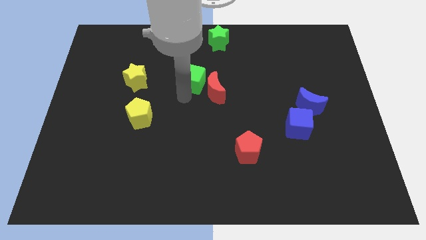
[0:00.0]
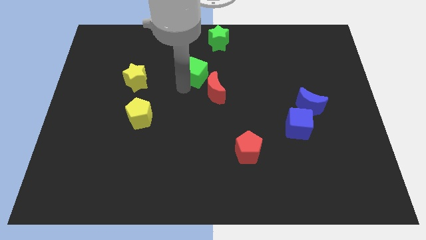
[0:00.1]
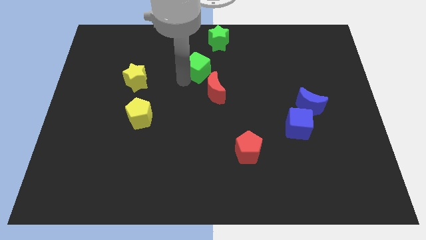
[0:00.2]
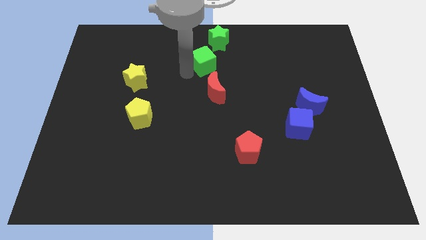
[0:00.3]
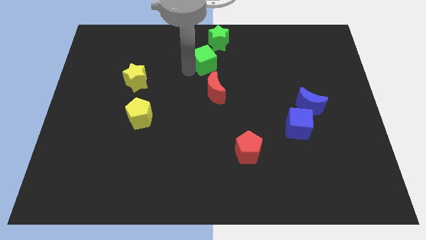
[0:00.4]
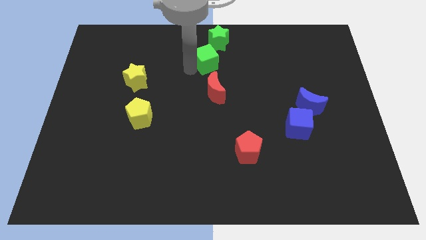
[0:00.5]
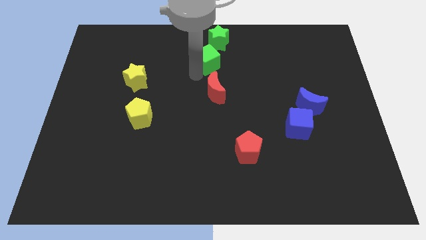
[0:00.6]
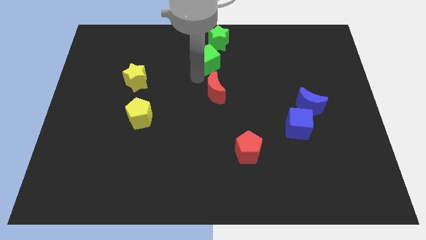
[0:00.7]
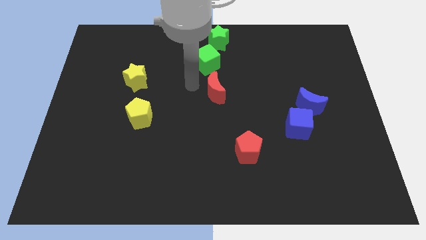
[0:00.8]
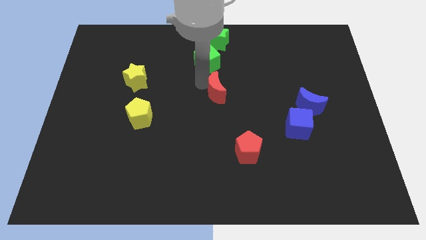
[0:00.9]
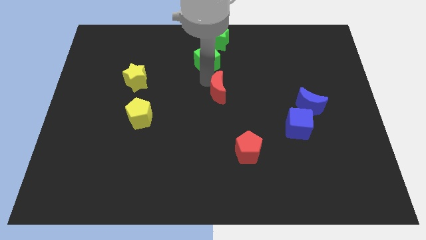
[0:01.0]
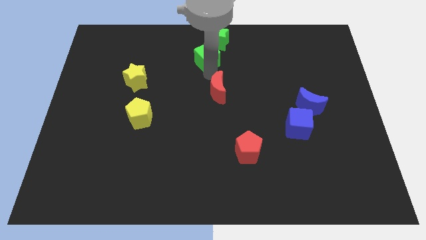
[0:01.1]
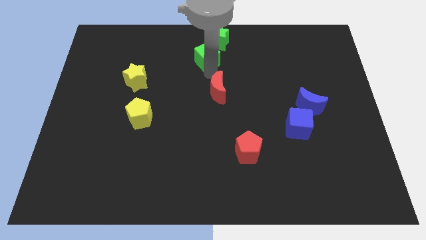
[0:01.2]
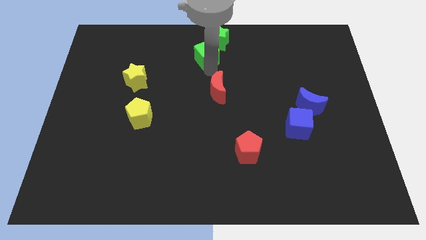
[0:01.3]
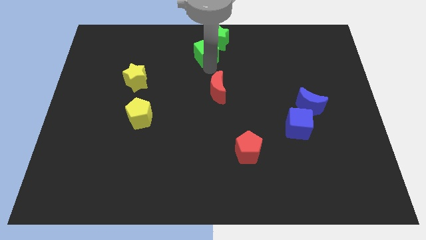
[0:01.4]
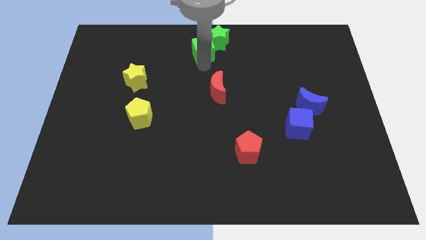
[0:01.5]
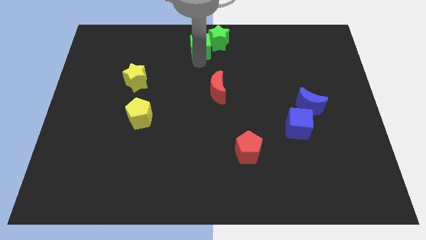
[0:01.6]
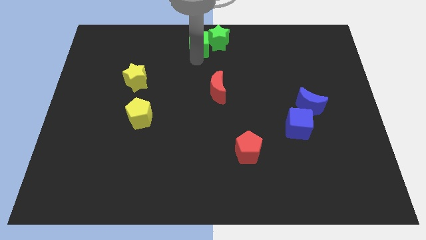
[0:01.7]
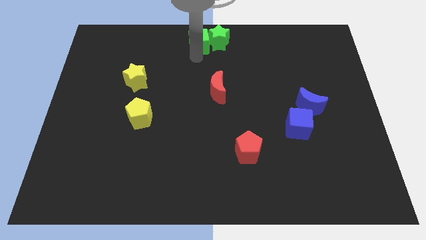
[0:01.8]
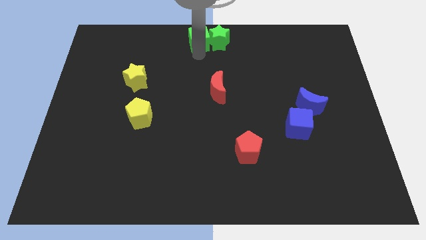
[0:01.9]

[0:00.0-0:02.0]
move the green cube towards the top center of the board

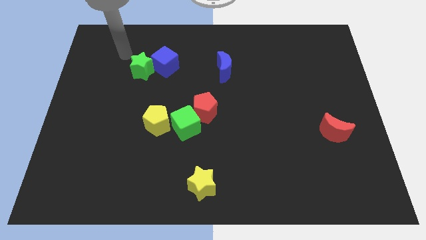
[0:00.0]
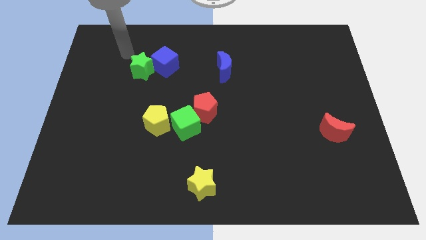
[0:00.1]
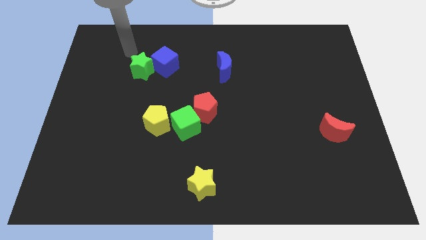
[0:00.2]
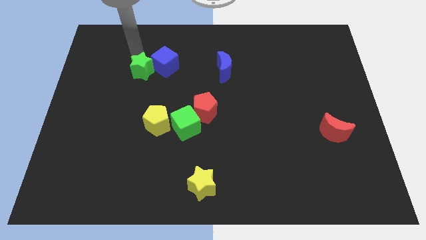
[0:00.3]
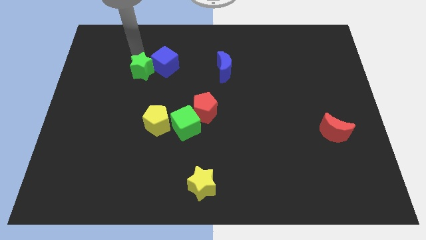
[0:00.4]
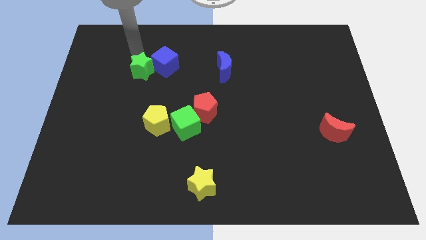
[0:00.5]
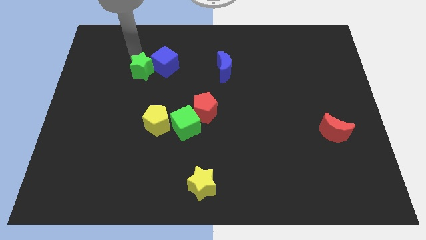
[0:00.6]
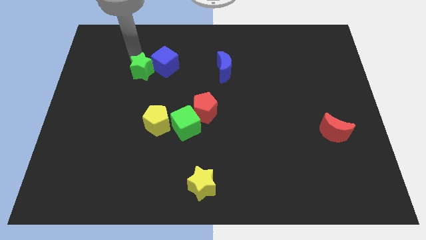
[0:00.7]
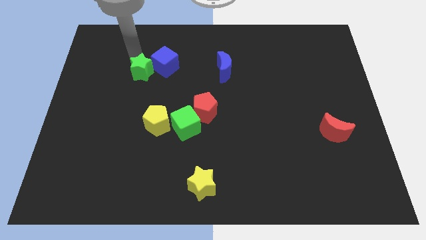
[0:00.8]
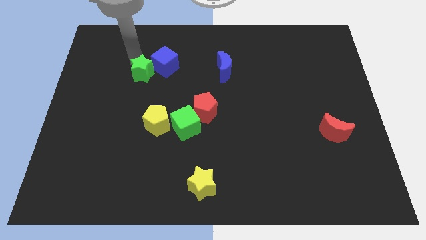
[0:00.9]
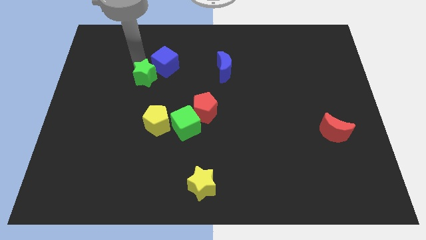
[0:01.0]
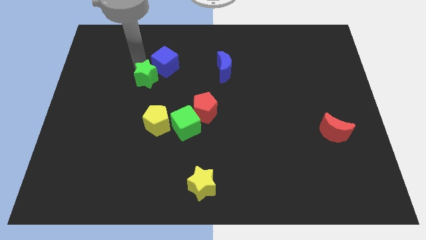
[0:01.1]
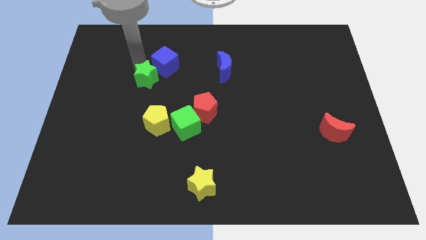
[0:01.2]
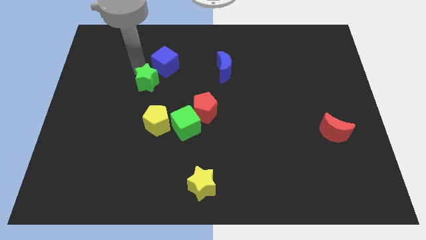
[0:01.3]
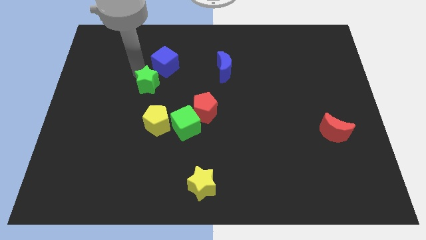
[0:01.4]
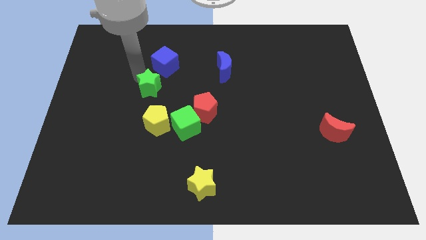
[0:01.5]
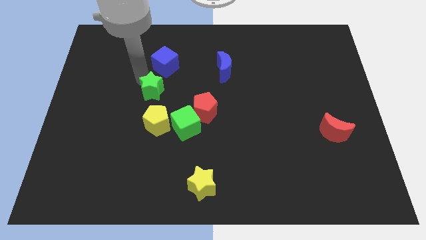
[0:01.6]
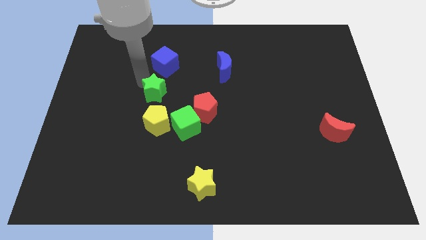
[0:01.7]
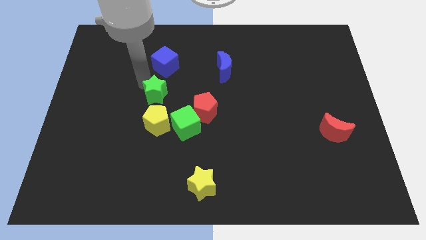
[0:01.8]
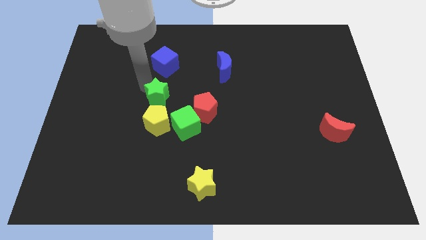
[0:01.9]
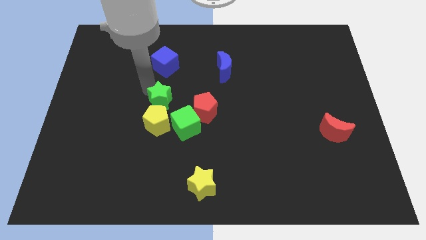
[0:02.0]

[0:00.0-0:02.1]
move green star on top of yellow pentagon

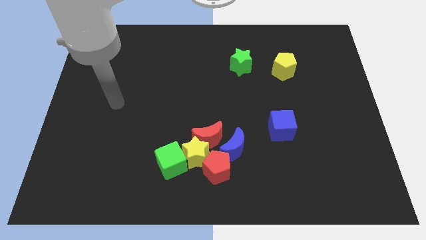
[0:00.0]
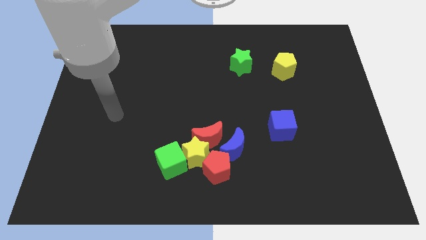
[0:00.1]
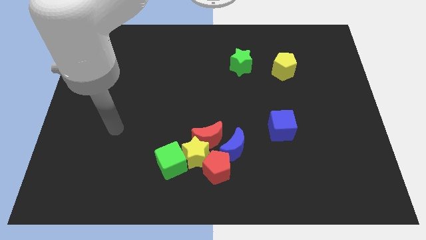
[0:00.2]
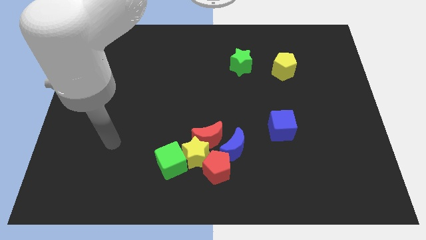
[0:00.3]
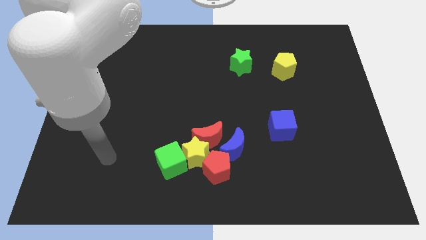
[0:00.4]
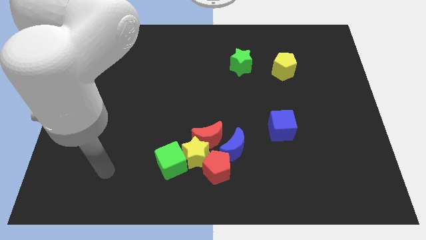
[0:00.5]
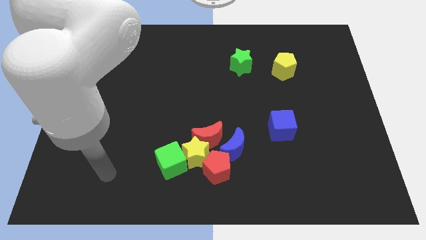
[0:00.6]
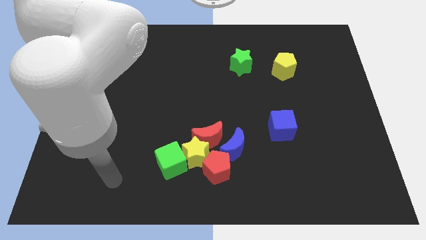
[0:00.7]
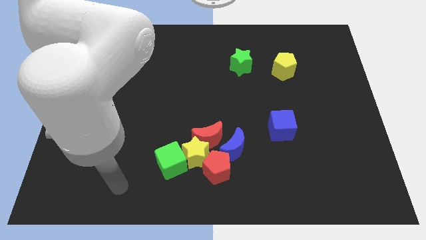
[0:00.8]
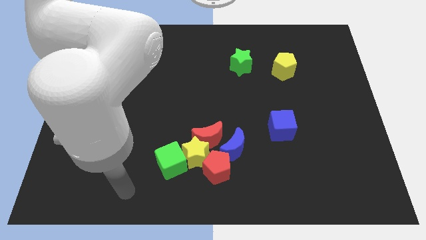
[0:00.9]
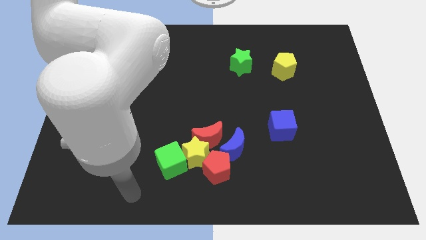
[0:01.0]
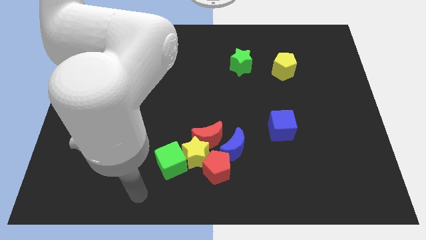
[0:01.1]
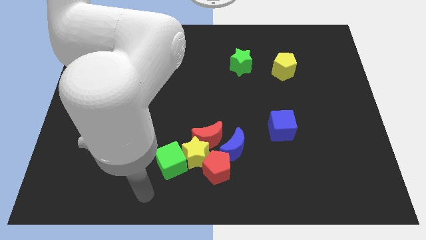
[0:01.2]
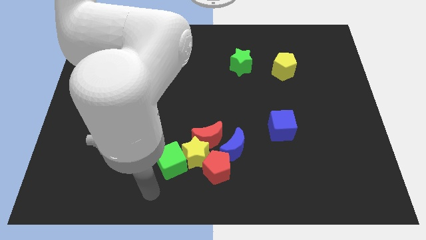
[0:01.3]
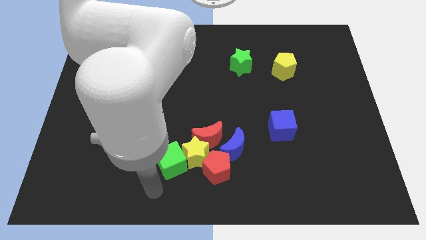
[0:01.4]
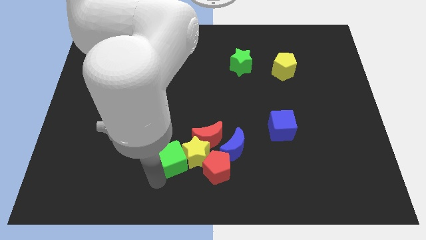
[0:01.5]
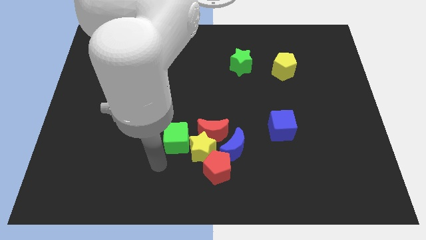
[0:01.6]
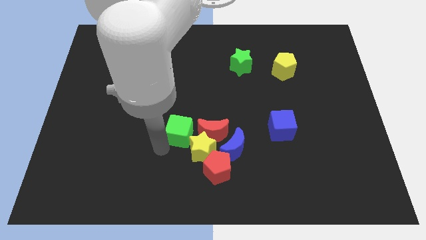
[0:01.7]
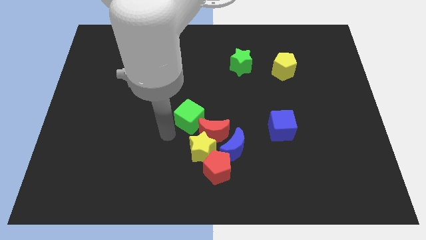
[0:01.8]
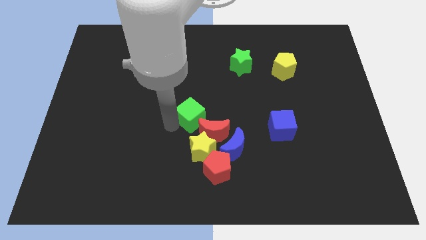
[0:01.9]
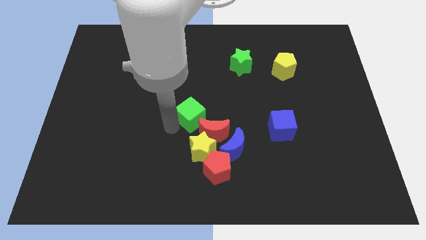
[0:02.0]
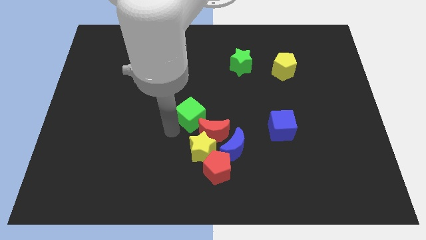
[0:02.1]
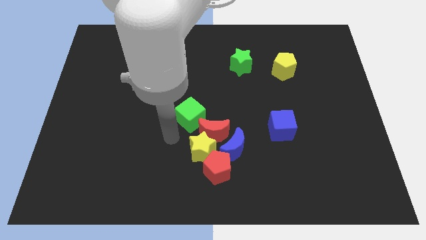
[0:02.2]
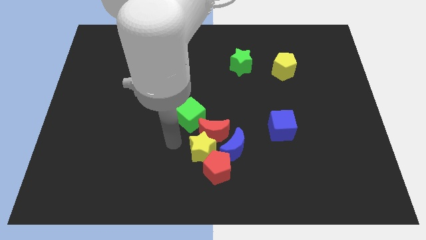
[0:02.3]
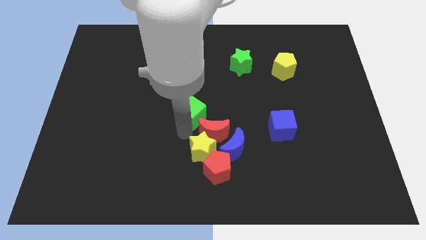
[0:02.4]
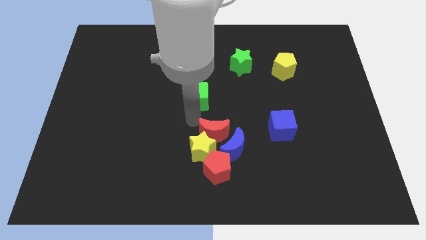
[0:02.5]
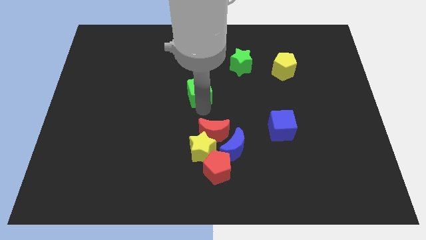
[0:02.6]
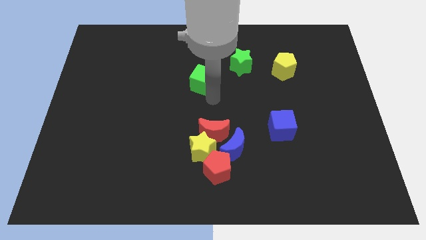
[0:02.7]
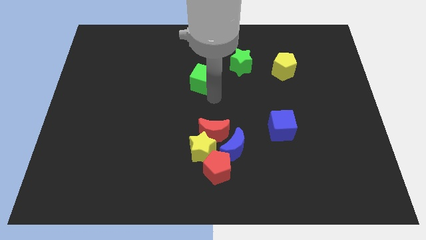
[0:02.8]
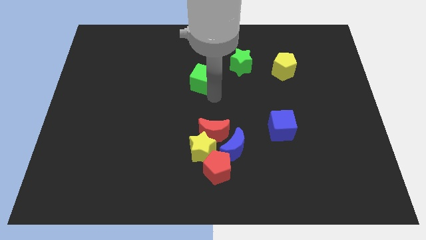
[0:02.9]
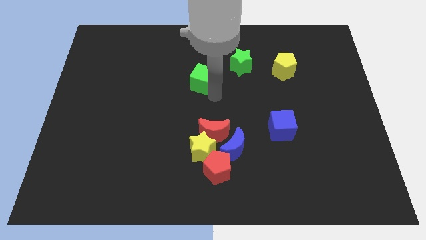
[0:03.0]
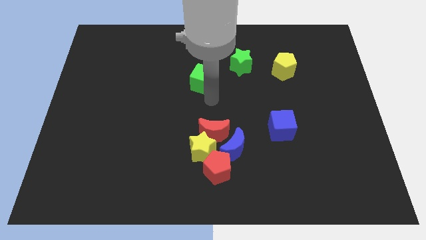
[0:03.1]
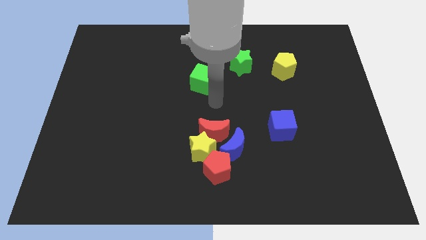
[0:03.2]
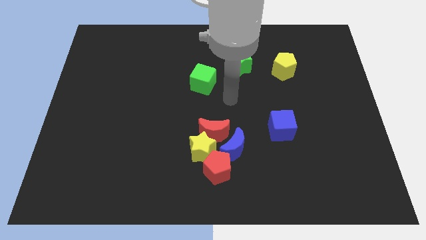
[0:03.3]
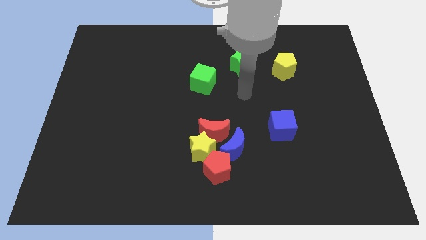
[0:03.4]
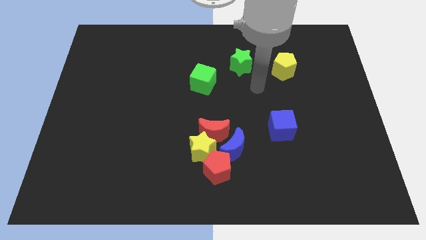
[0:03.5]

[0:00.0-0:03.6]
move the green cube diagonally left below the green star

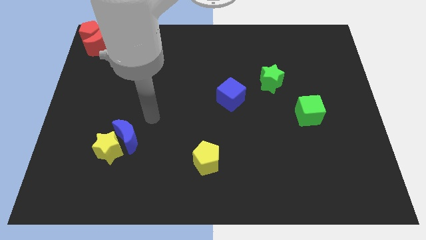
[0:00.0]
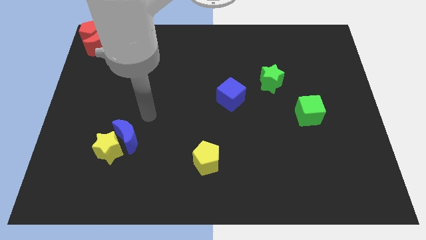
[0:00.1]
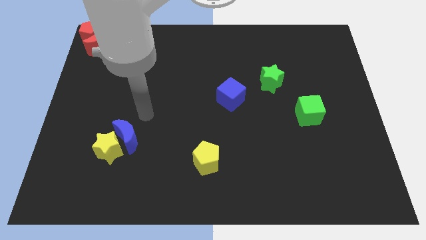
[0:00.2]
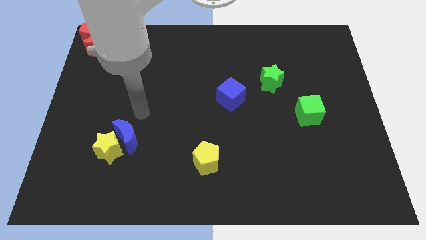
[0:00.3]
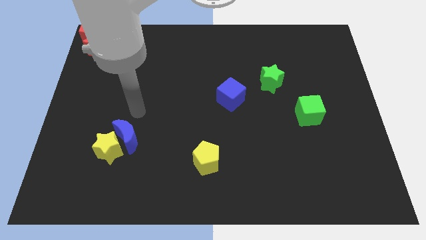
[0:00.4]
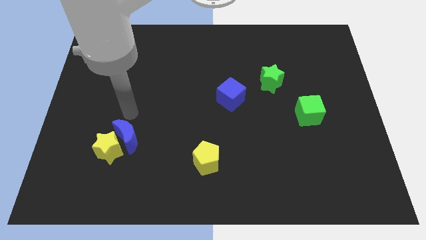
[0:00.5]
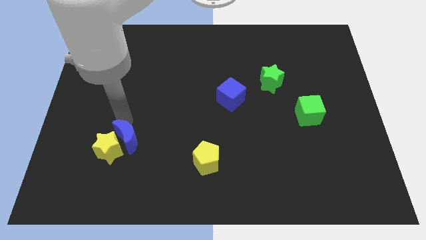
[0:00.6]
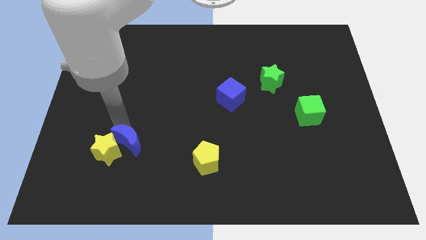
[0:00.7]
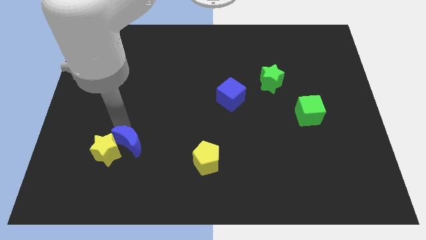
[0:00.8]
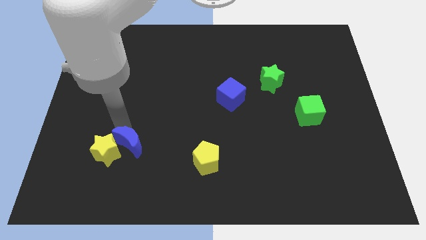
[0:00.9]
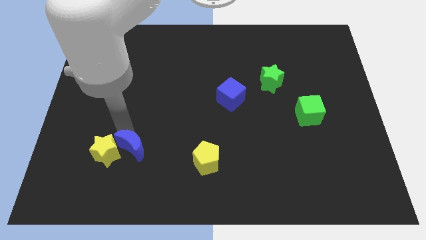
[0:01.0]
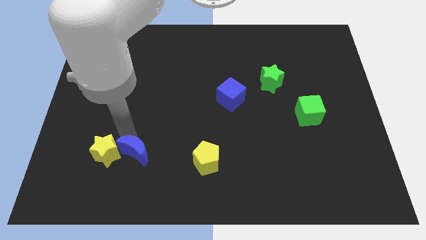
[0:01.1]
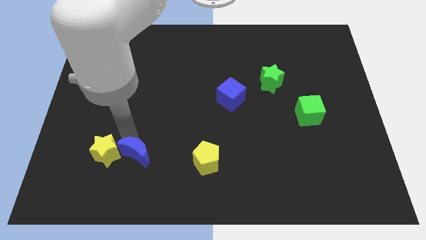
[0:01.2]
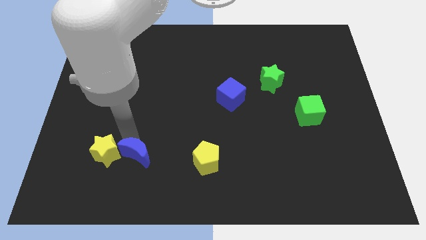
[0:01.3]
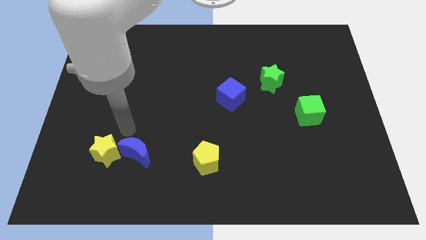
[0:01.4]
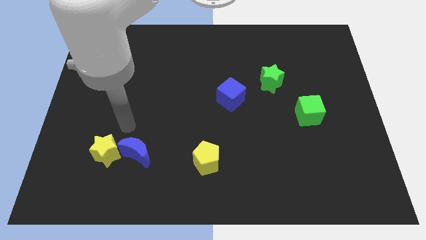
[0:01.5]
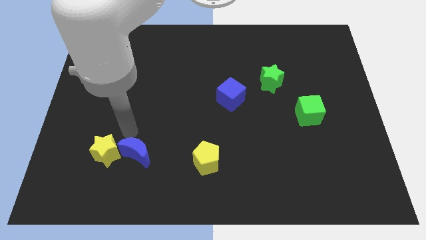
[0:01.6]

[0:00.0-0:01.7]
push the blue moon into yellow star
